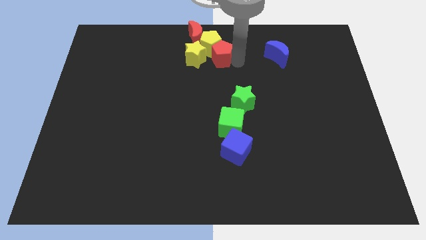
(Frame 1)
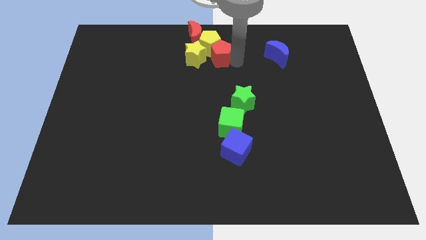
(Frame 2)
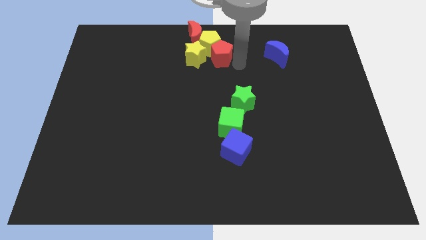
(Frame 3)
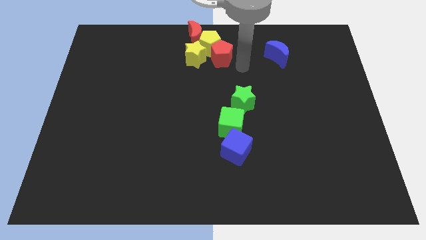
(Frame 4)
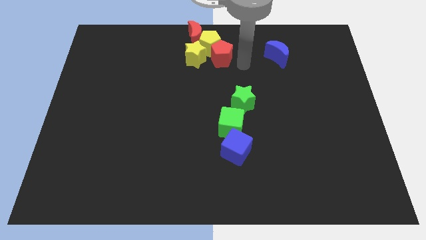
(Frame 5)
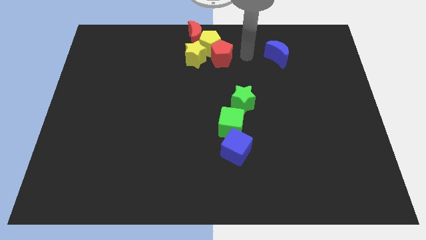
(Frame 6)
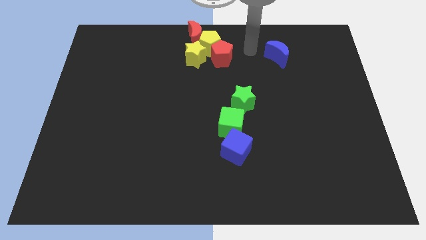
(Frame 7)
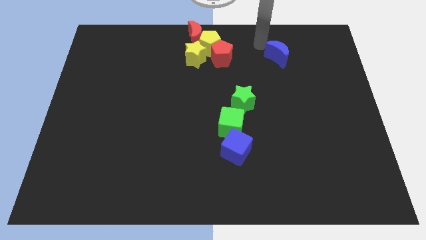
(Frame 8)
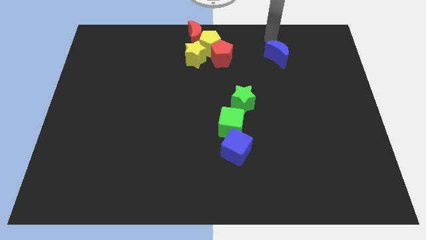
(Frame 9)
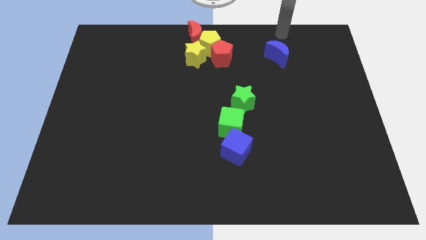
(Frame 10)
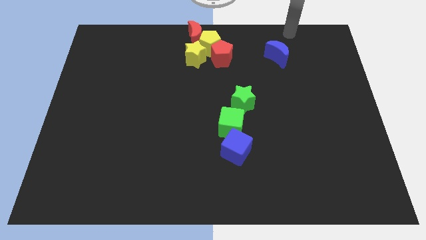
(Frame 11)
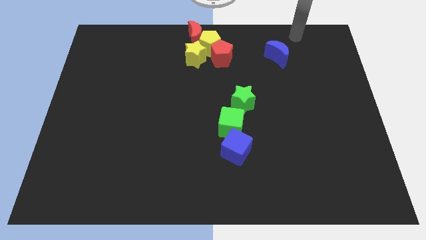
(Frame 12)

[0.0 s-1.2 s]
move your arm away from red pentagon

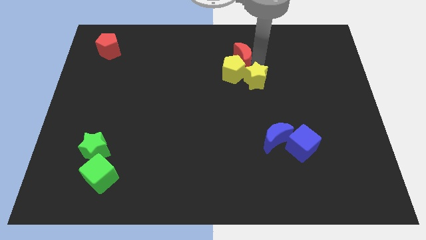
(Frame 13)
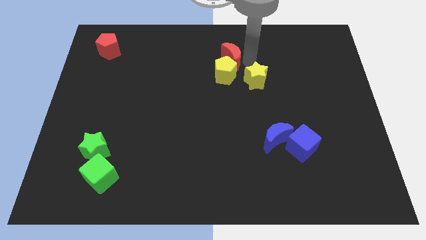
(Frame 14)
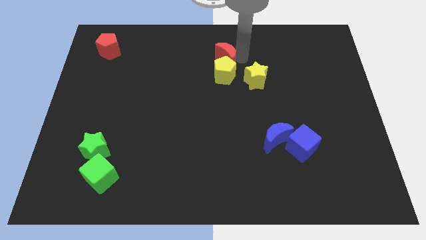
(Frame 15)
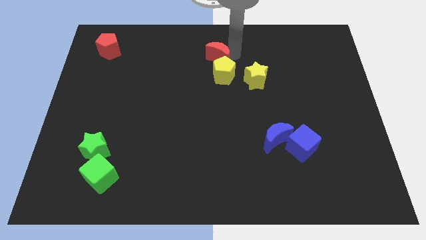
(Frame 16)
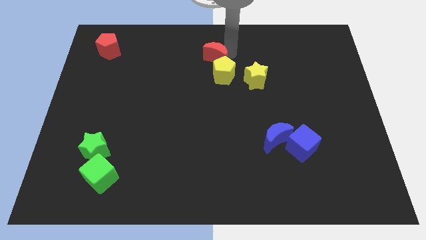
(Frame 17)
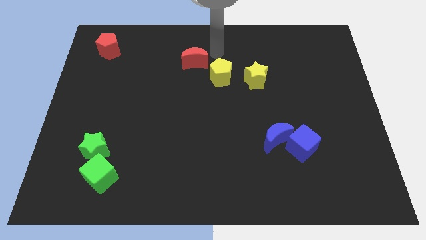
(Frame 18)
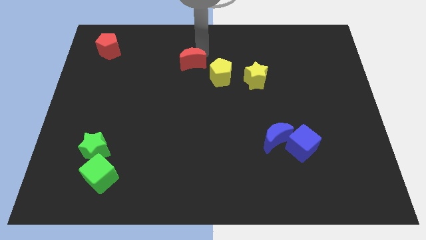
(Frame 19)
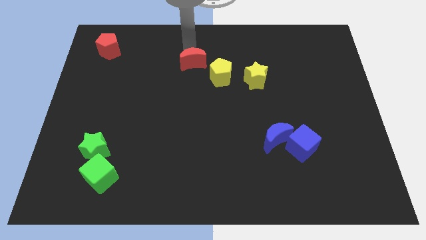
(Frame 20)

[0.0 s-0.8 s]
move the yellow pentagon in between the yellow star and red crescent

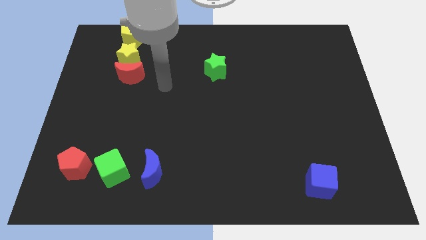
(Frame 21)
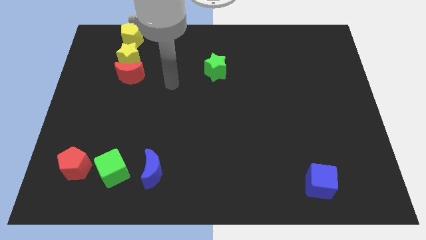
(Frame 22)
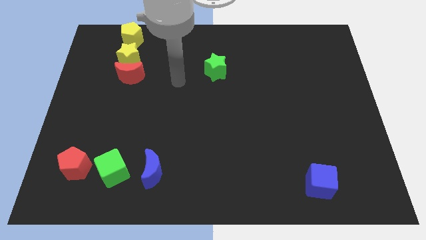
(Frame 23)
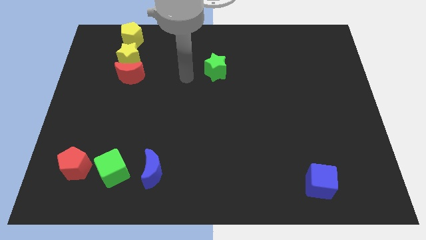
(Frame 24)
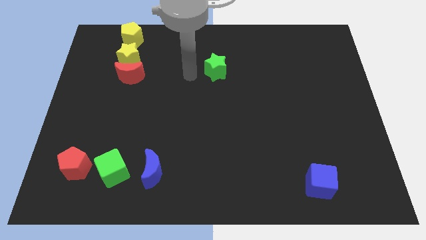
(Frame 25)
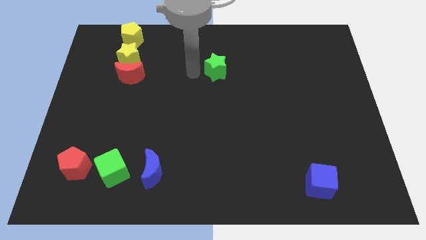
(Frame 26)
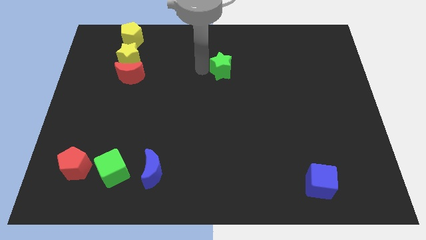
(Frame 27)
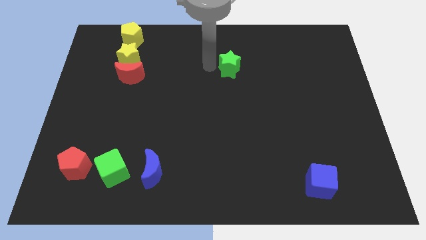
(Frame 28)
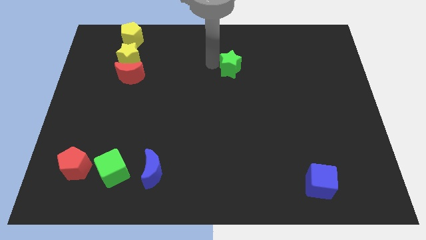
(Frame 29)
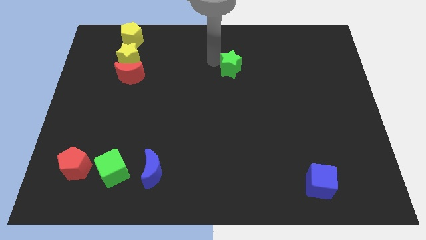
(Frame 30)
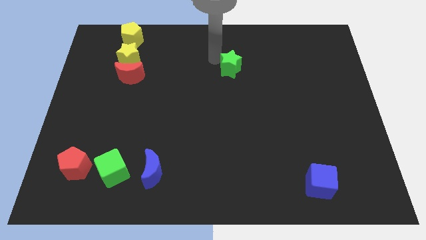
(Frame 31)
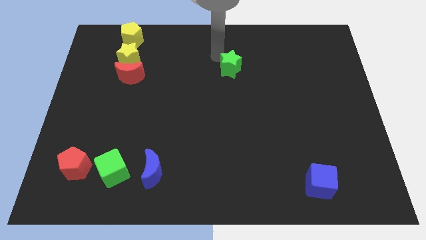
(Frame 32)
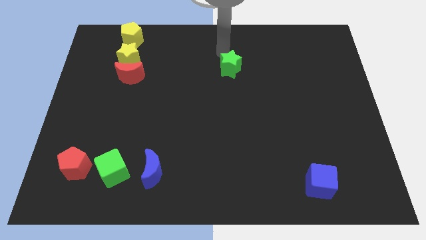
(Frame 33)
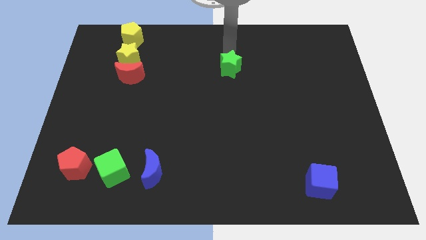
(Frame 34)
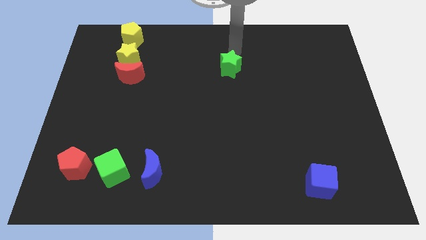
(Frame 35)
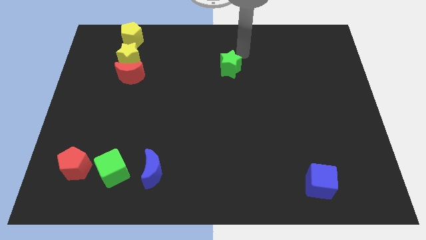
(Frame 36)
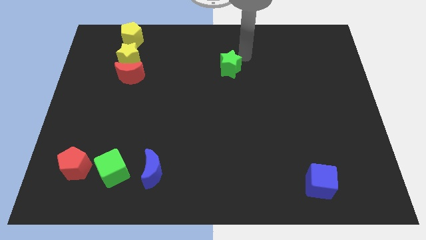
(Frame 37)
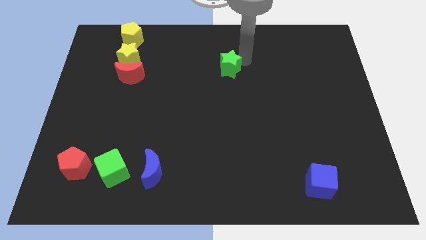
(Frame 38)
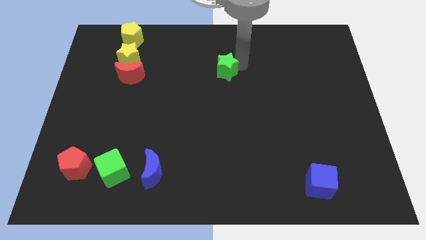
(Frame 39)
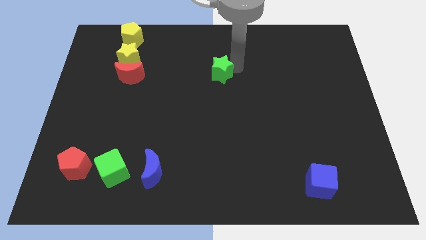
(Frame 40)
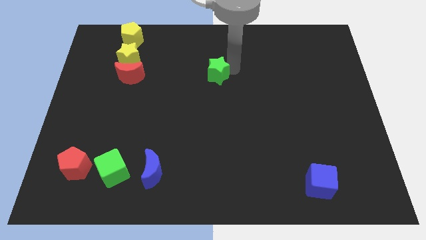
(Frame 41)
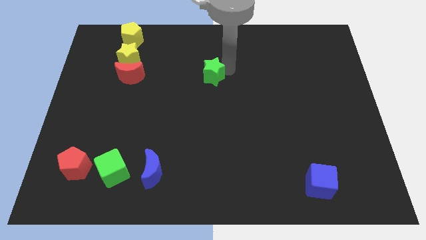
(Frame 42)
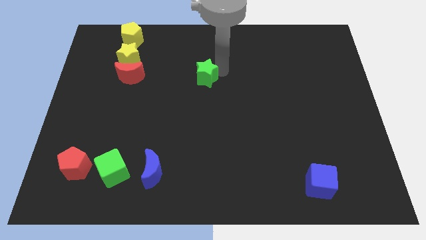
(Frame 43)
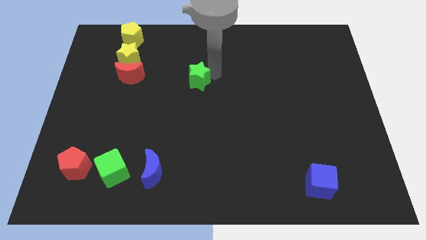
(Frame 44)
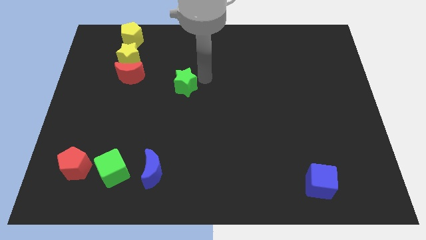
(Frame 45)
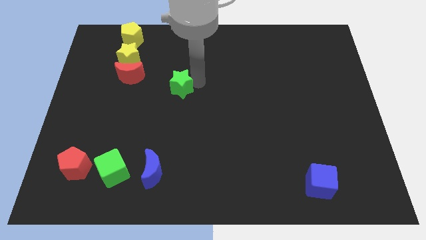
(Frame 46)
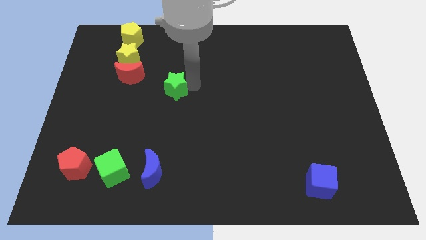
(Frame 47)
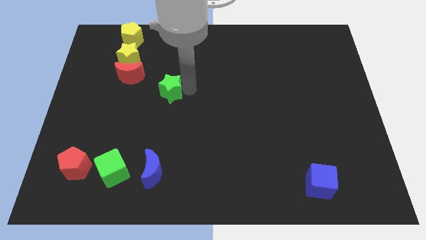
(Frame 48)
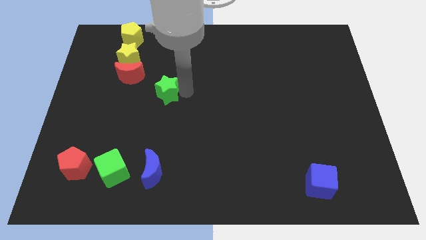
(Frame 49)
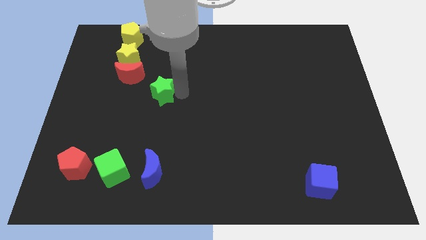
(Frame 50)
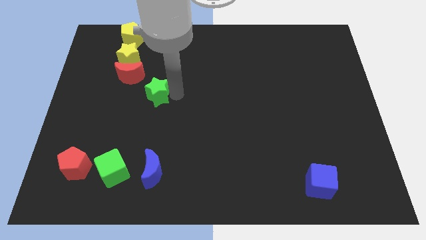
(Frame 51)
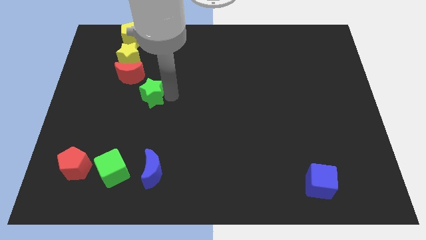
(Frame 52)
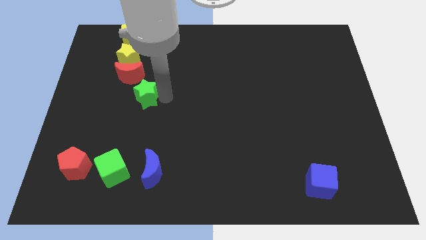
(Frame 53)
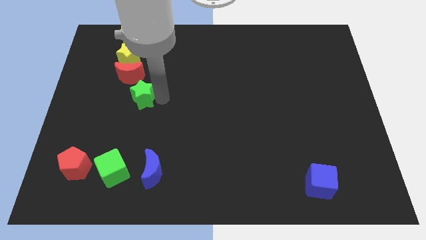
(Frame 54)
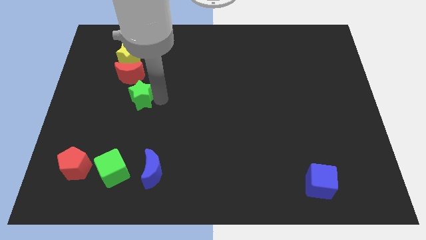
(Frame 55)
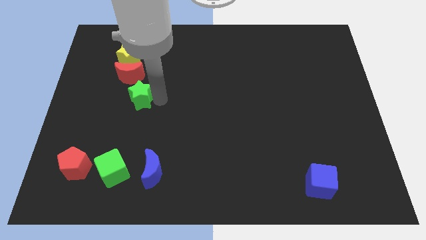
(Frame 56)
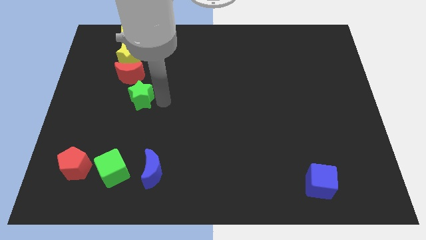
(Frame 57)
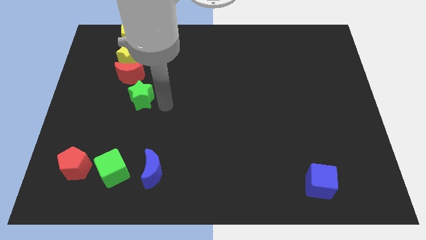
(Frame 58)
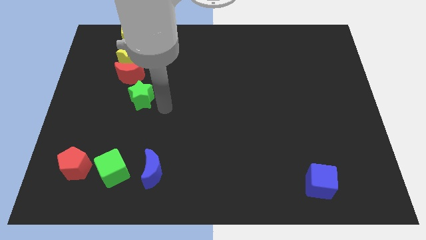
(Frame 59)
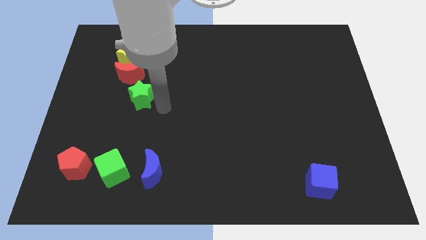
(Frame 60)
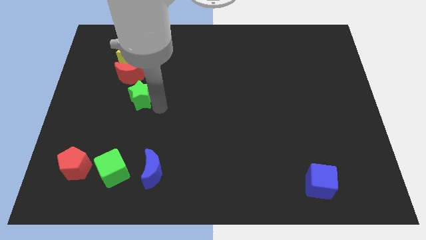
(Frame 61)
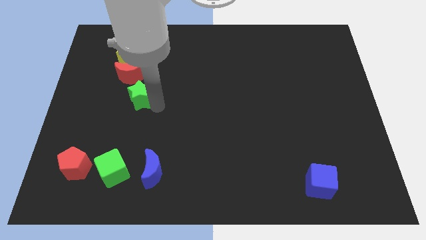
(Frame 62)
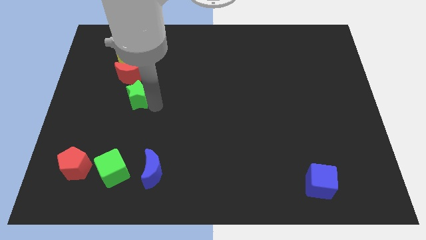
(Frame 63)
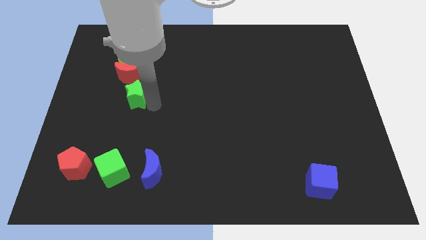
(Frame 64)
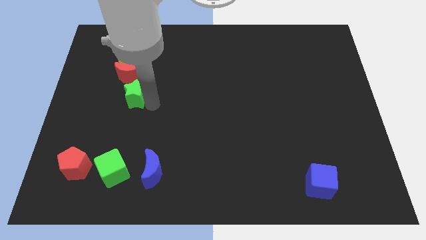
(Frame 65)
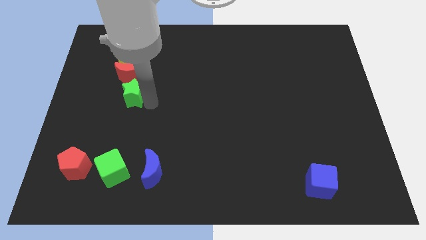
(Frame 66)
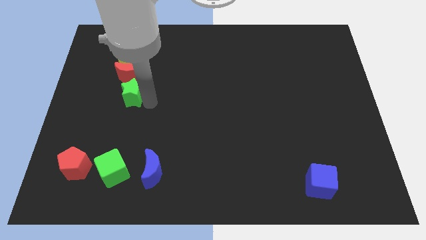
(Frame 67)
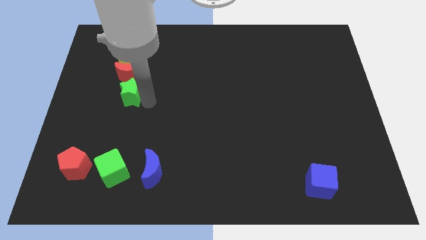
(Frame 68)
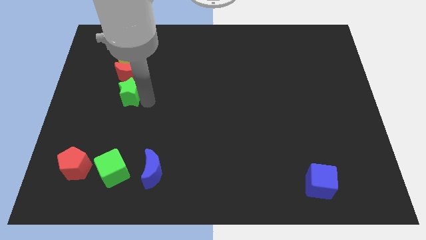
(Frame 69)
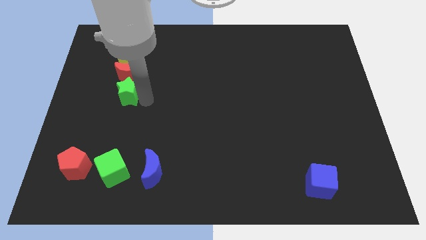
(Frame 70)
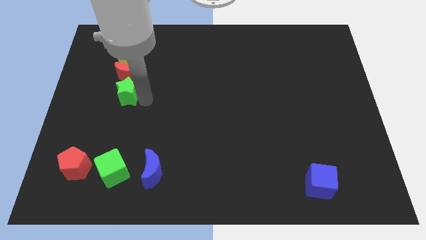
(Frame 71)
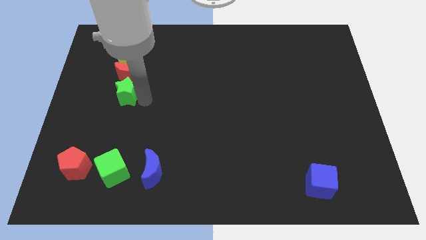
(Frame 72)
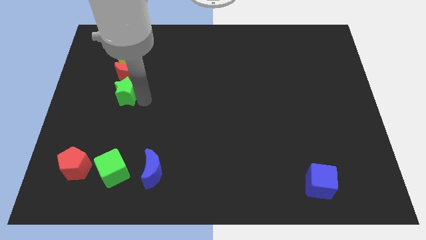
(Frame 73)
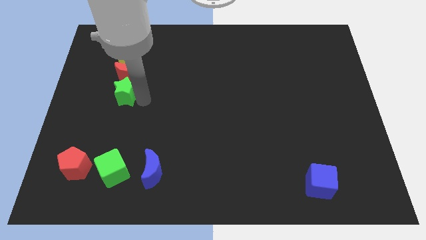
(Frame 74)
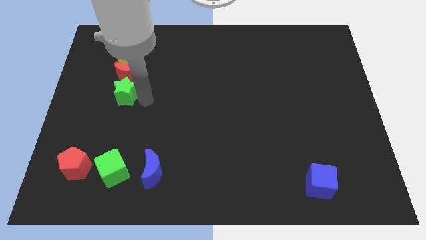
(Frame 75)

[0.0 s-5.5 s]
move green star below the red moon

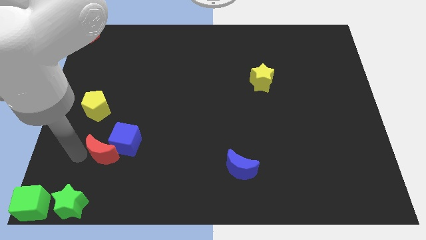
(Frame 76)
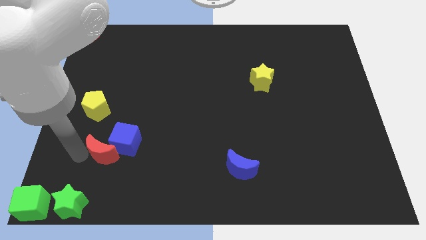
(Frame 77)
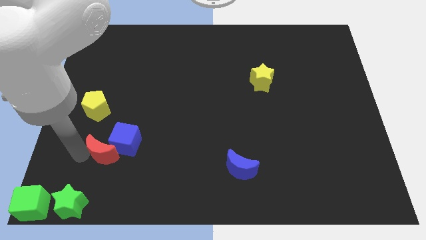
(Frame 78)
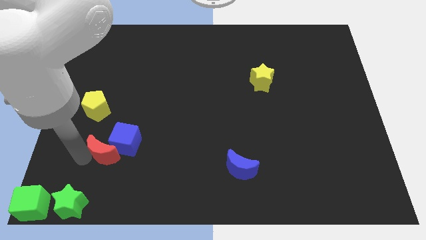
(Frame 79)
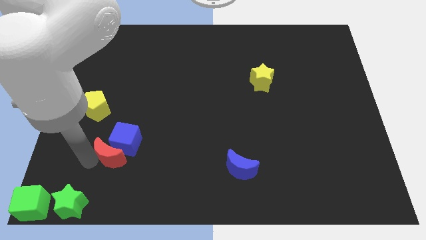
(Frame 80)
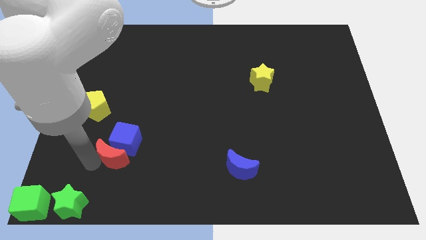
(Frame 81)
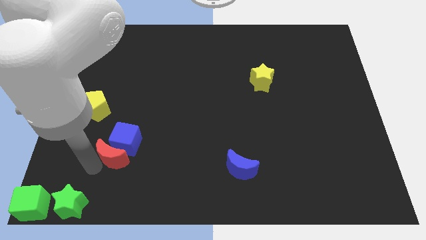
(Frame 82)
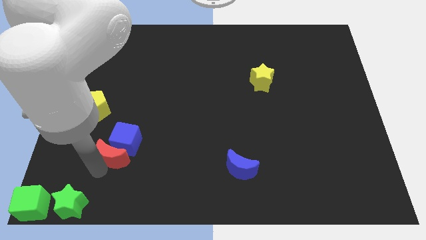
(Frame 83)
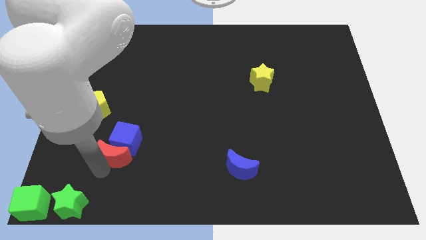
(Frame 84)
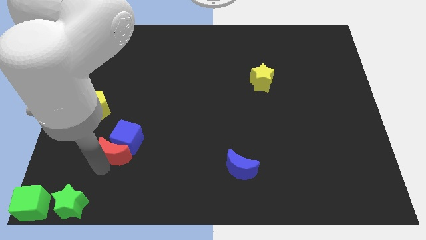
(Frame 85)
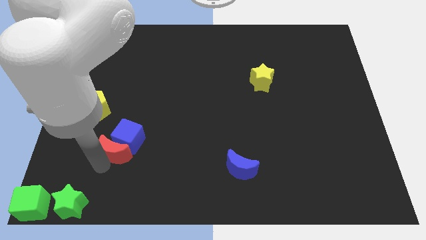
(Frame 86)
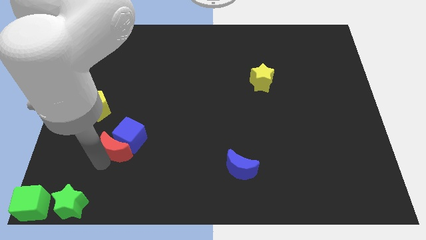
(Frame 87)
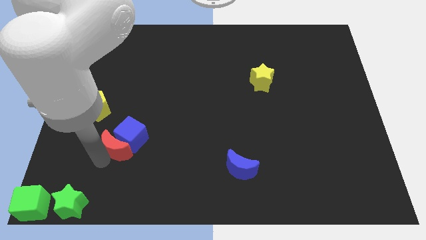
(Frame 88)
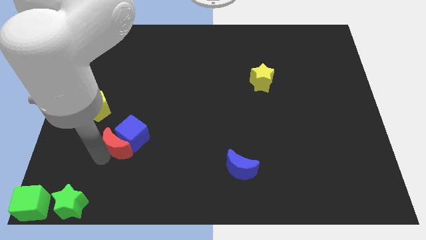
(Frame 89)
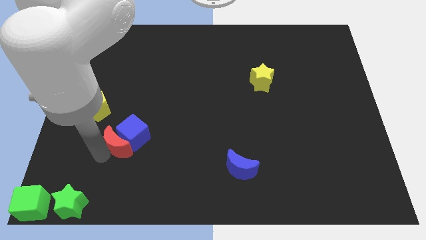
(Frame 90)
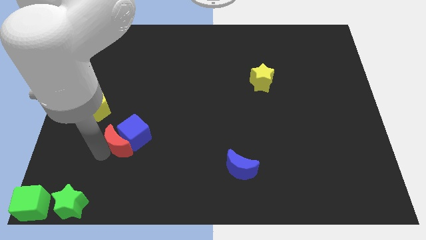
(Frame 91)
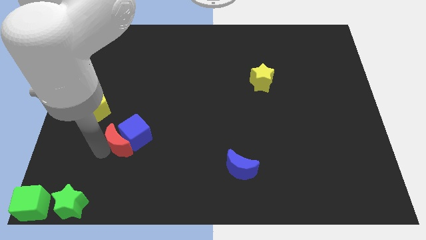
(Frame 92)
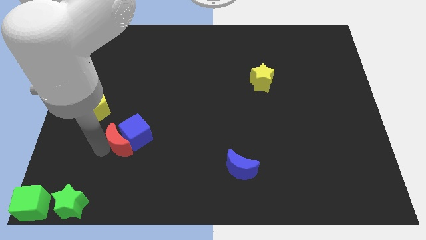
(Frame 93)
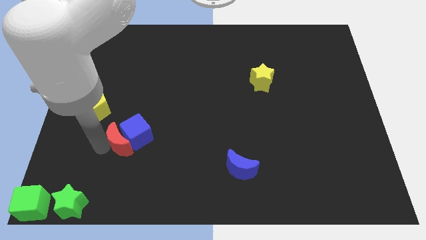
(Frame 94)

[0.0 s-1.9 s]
move the red crescent into the blue cube on the board
